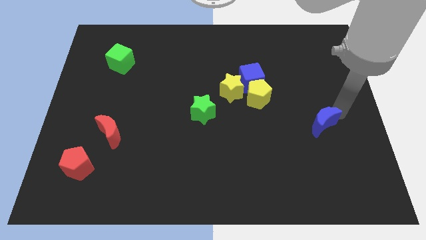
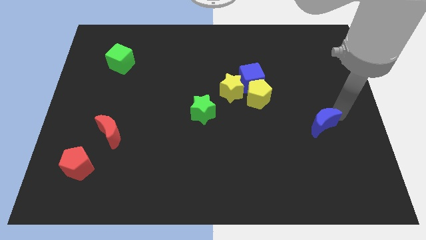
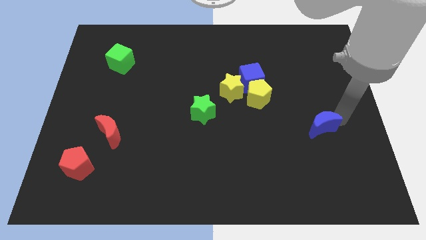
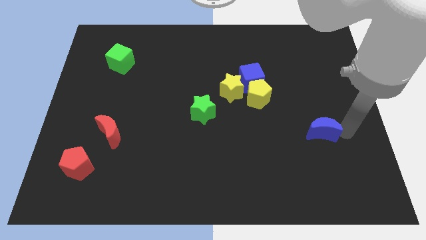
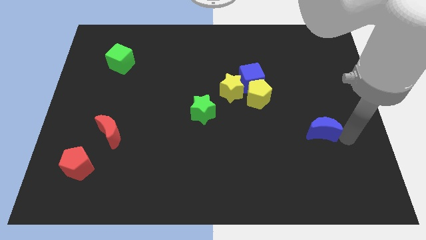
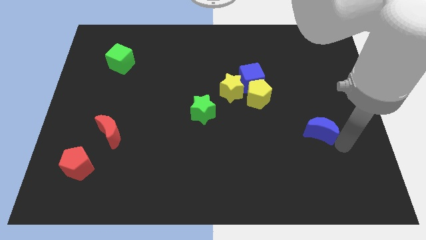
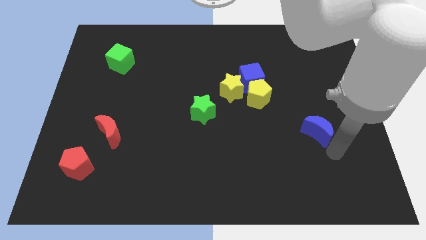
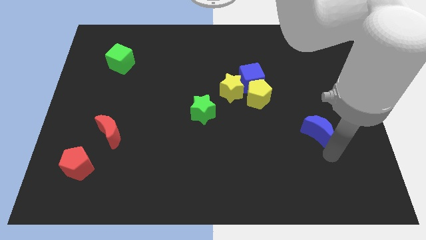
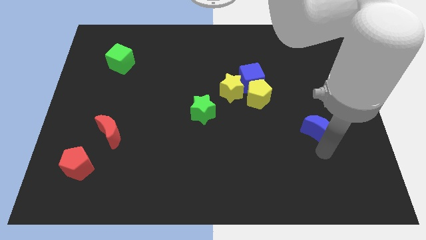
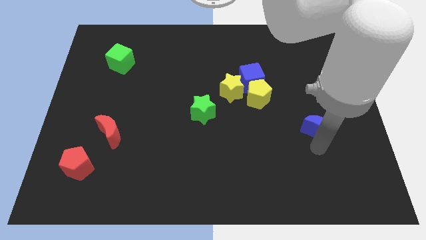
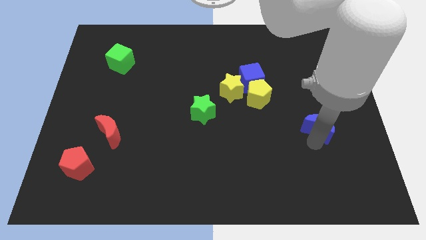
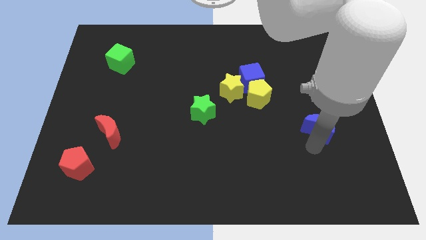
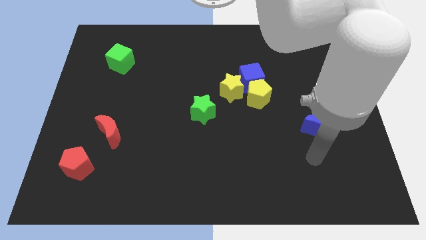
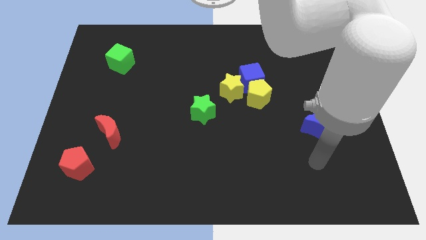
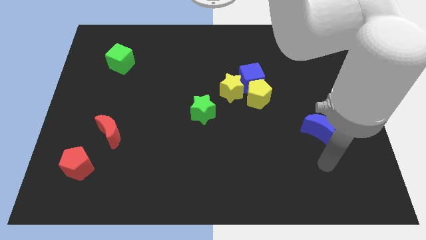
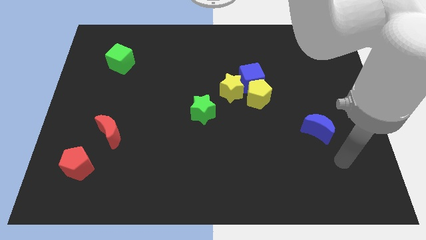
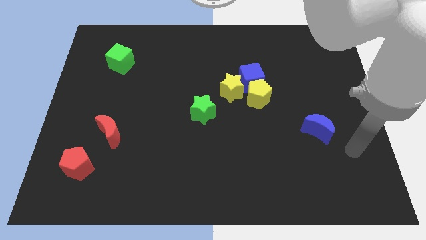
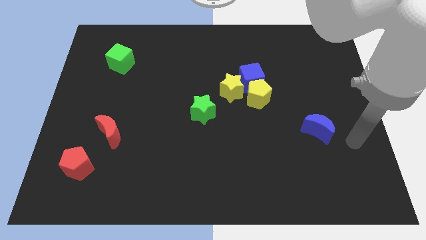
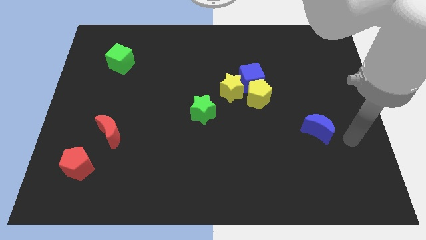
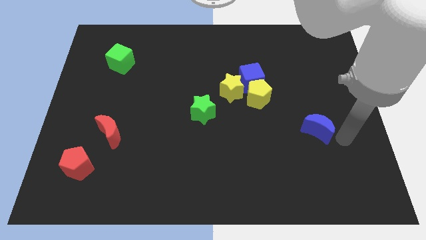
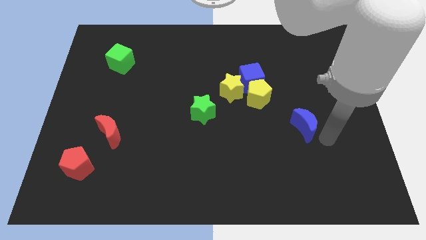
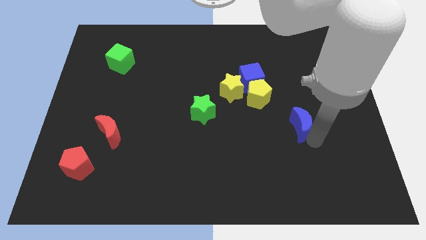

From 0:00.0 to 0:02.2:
push the blue moon slightly to the left

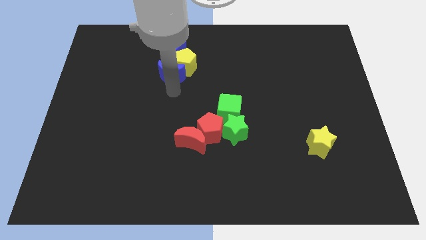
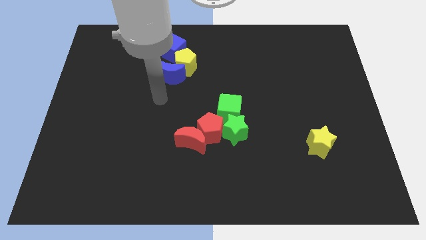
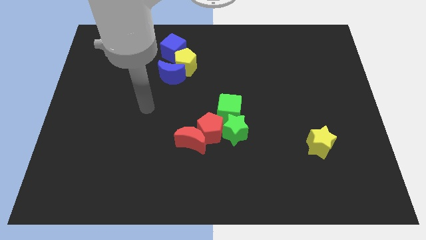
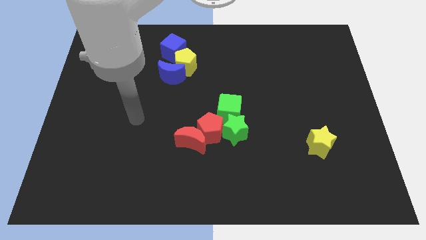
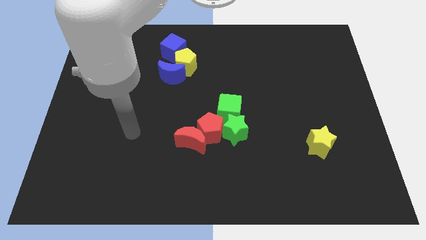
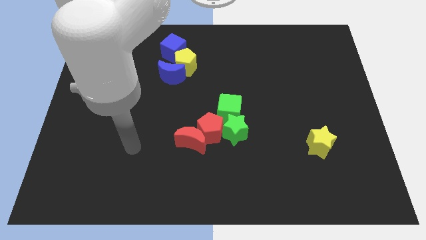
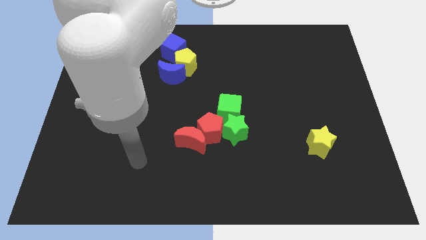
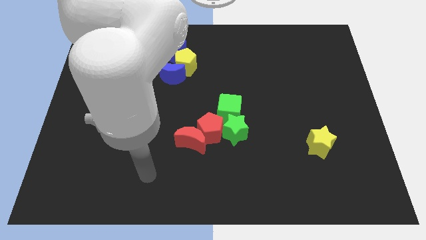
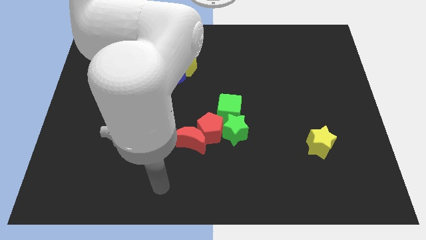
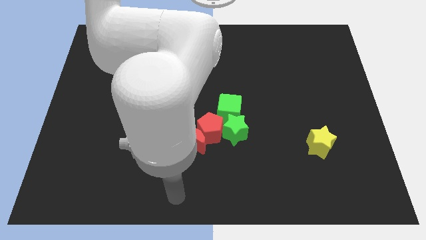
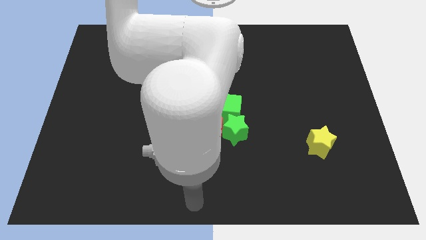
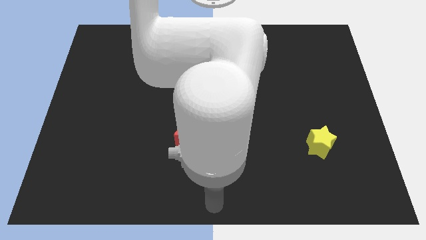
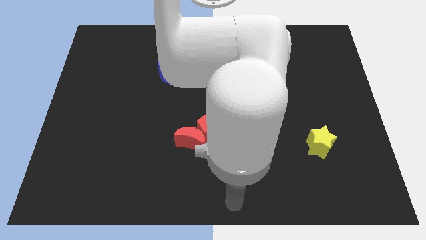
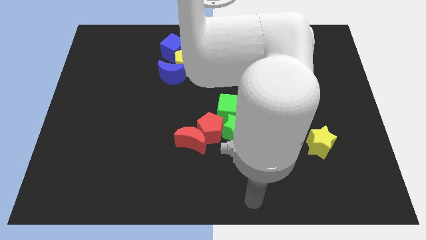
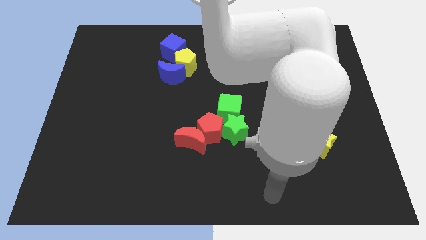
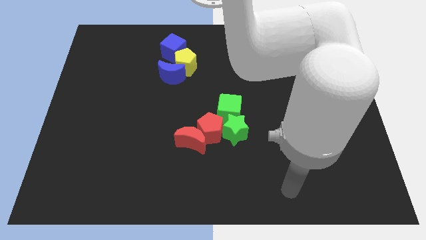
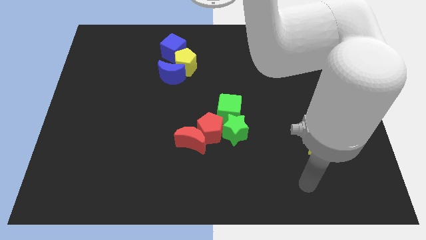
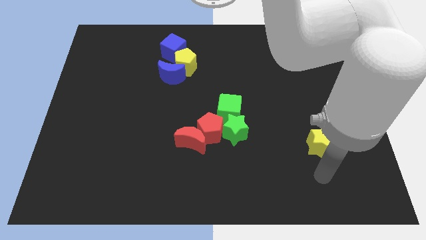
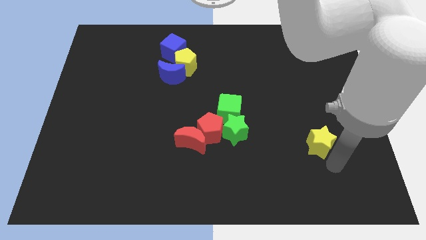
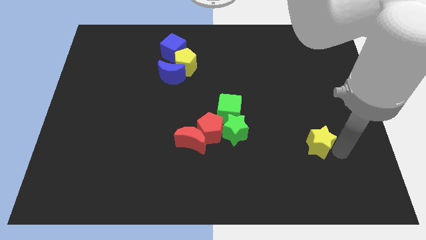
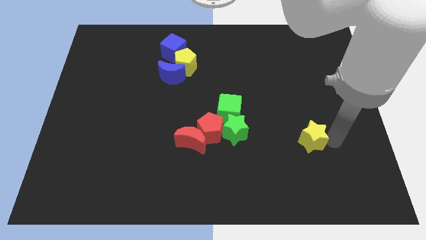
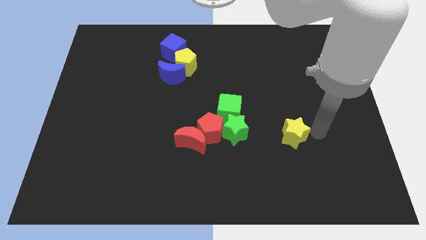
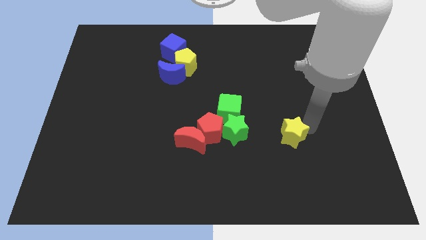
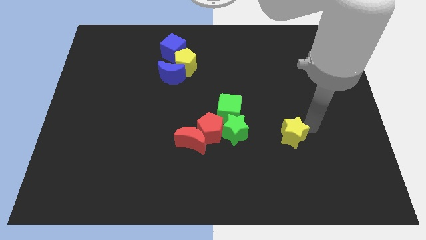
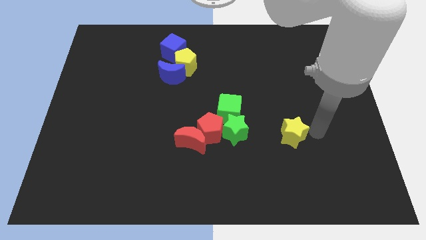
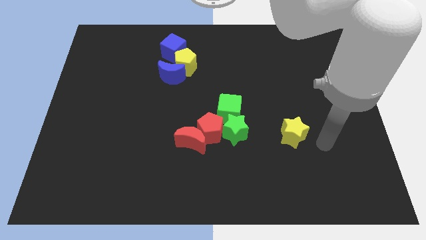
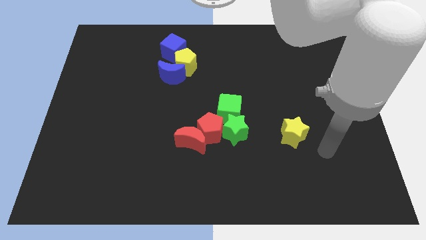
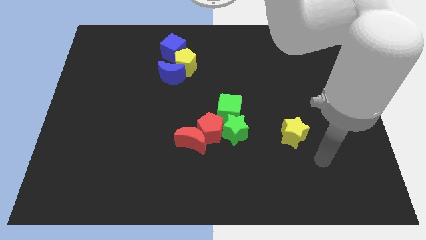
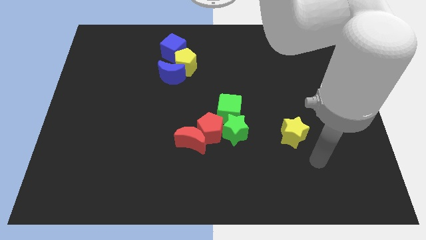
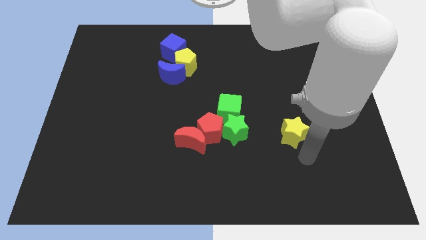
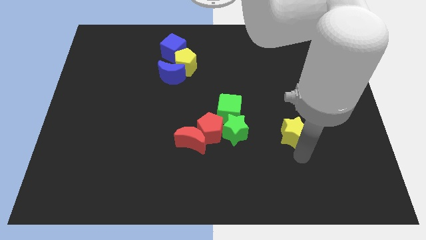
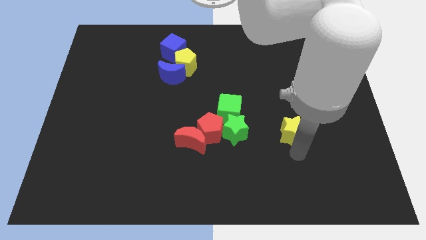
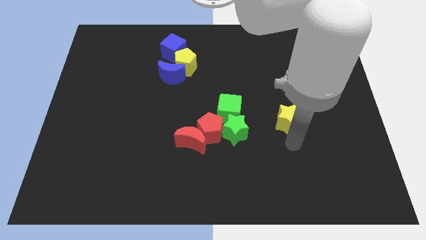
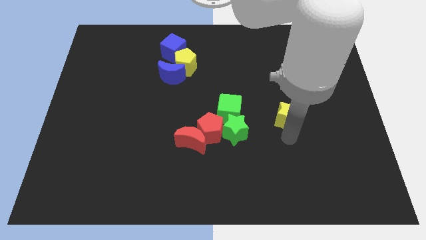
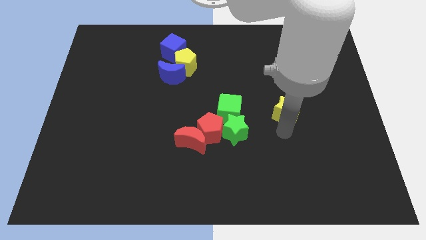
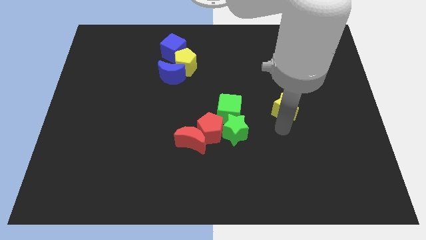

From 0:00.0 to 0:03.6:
put the yellow star diagonally top right to the green star

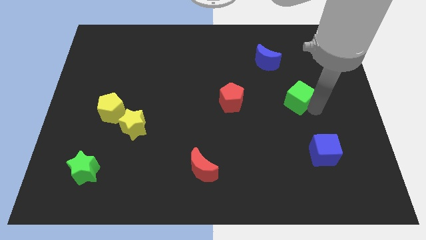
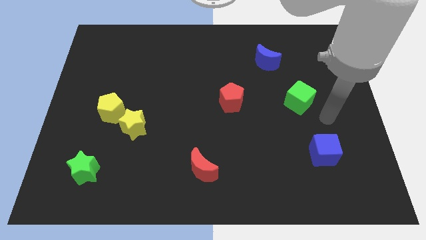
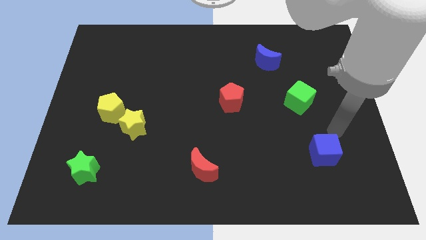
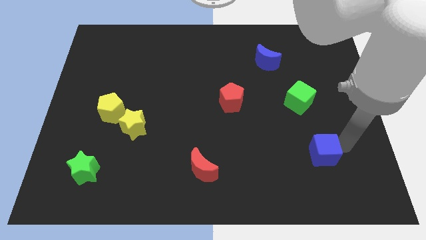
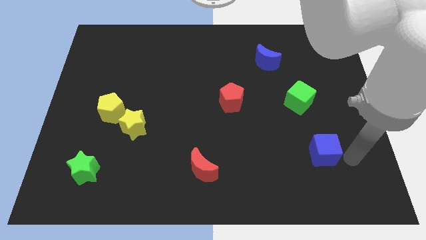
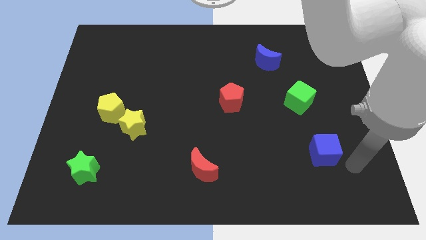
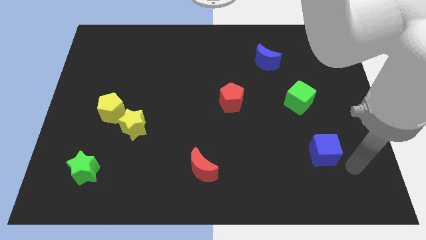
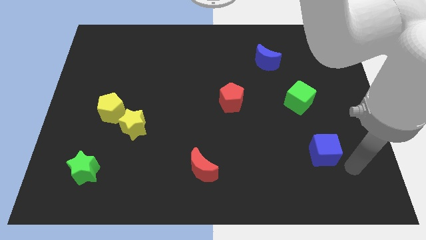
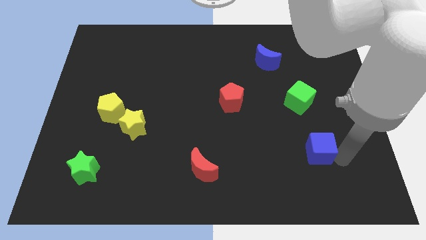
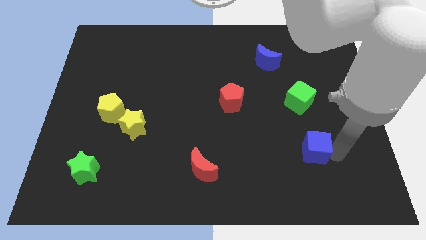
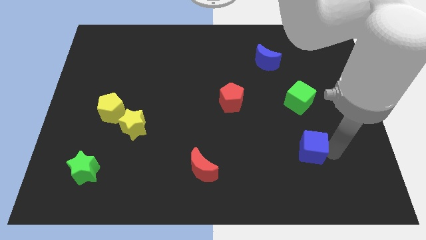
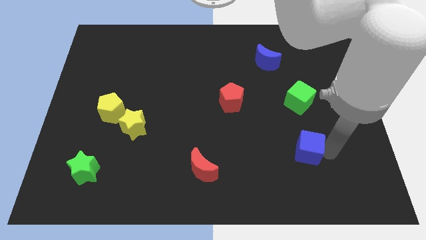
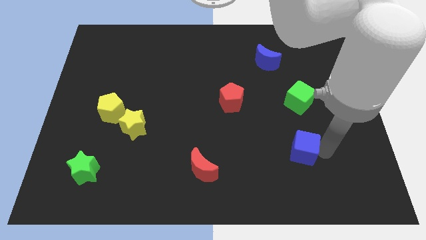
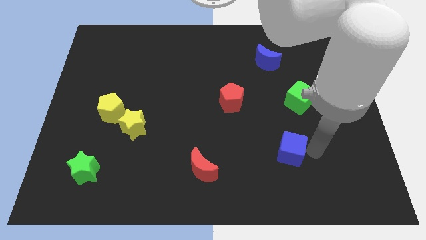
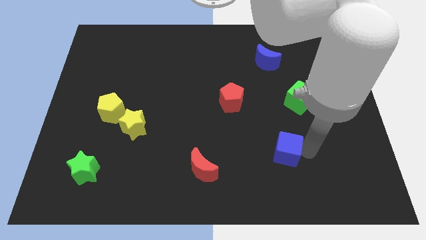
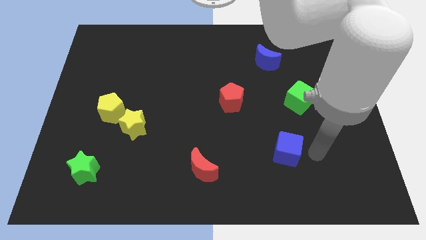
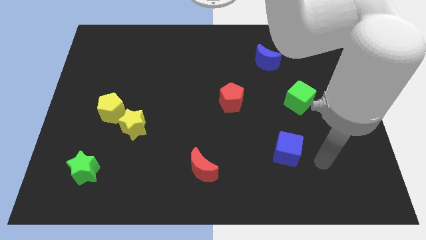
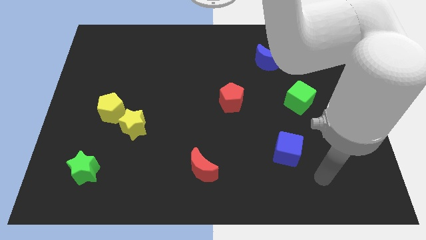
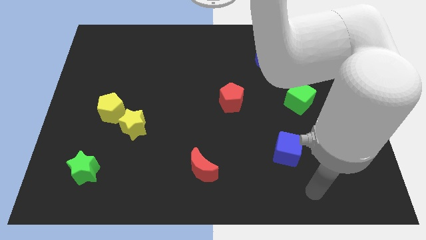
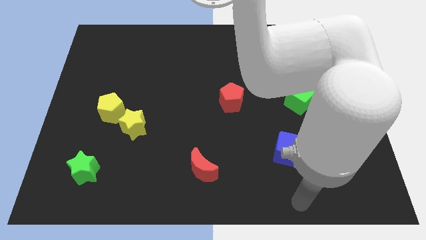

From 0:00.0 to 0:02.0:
slightly move the blue cube to the left

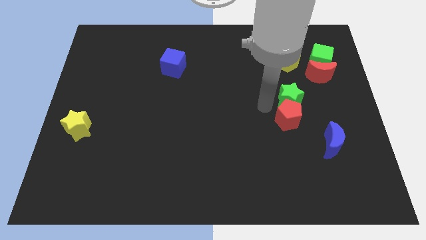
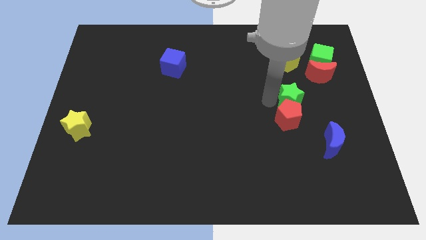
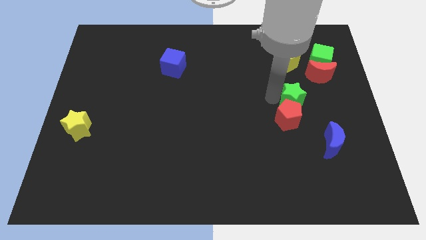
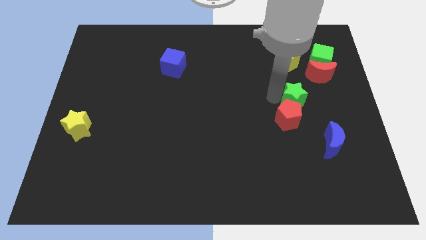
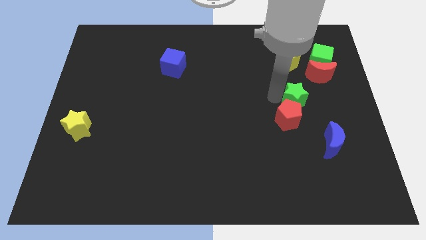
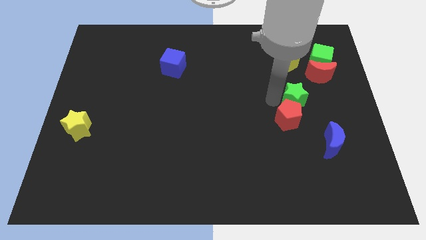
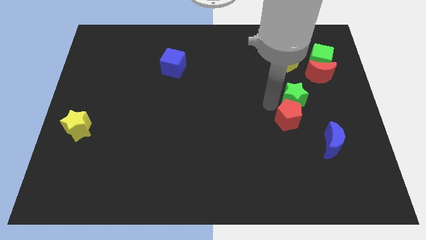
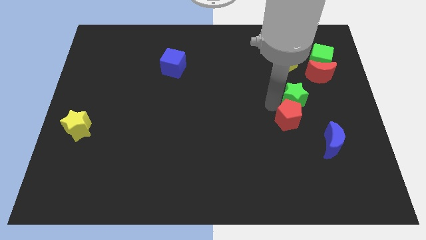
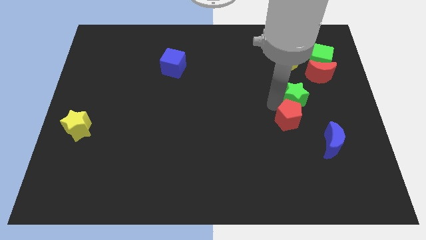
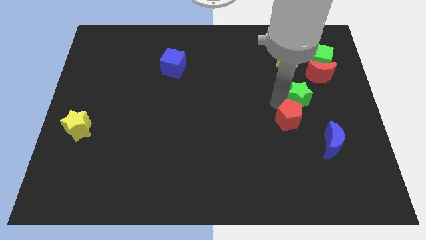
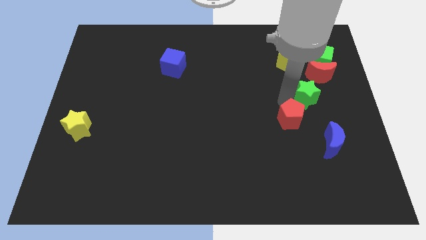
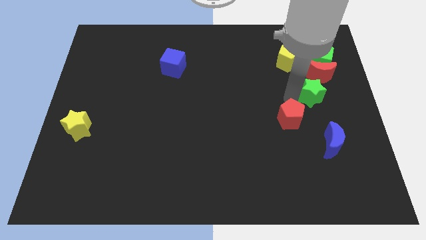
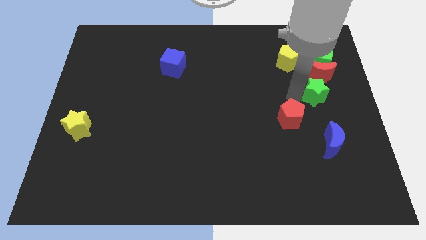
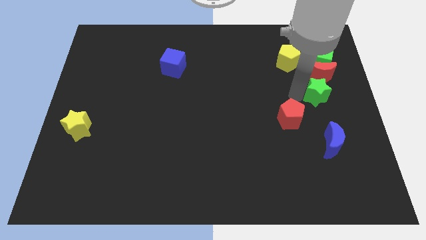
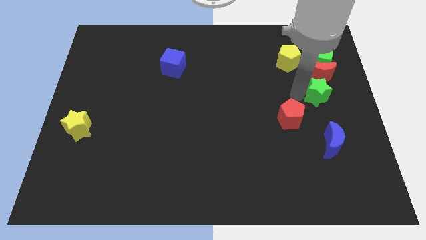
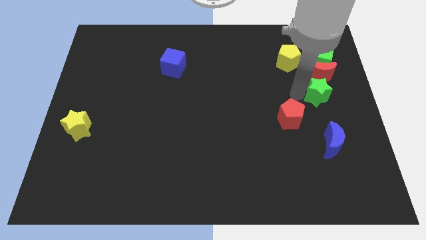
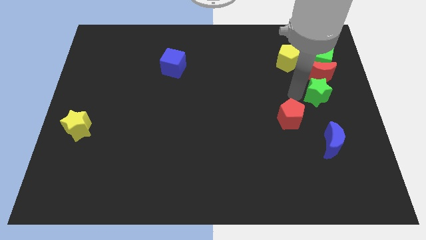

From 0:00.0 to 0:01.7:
separate the green star from the red pentagon
